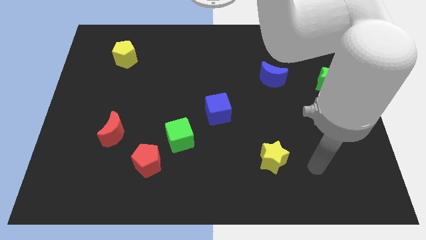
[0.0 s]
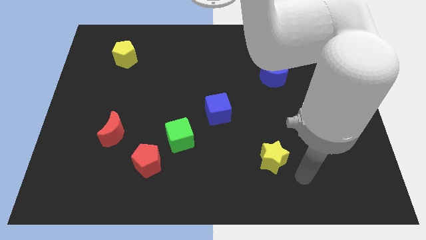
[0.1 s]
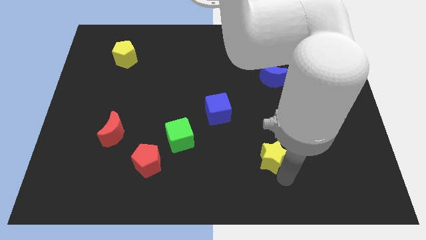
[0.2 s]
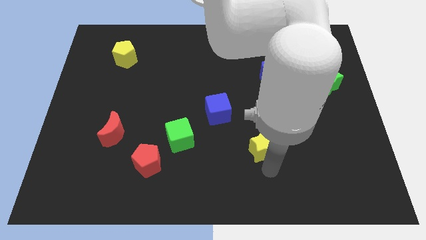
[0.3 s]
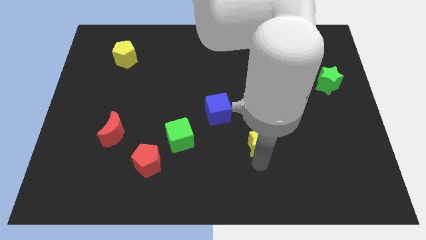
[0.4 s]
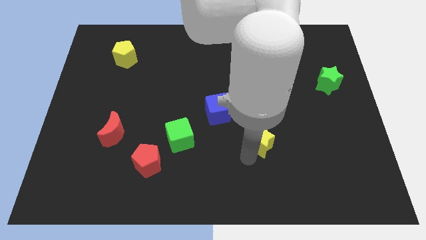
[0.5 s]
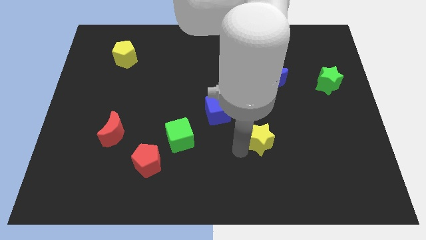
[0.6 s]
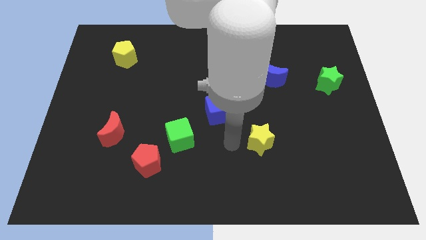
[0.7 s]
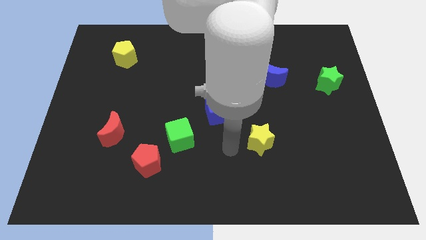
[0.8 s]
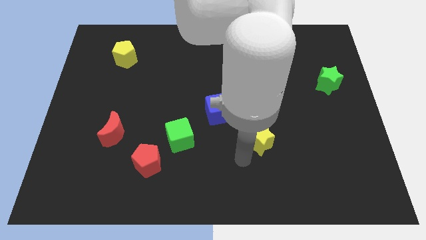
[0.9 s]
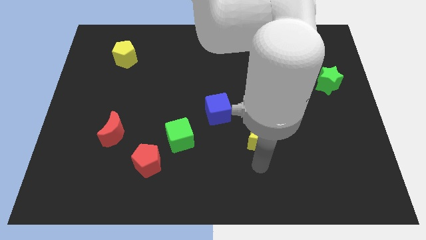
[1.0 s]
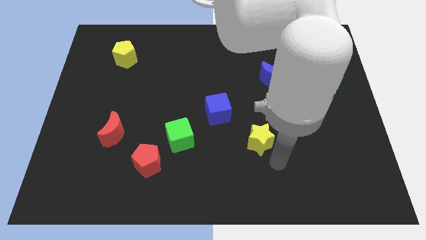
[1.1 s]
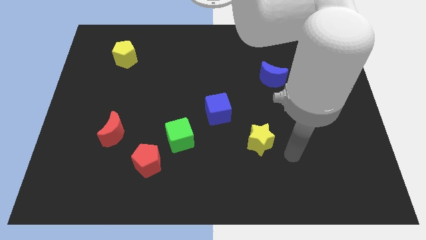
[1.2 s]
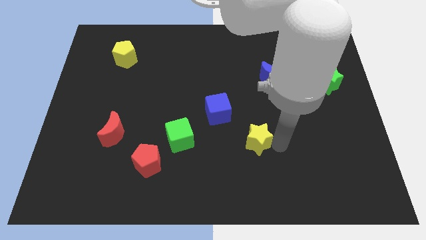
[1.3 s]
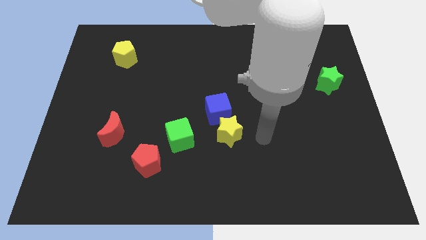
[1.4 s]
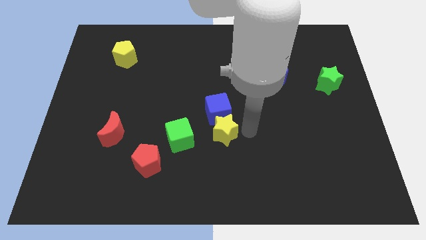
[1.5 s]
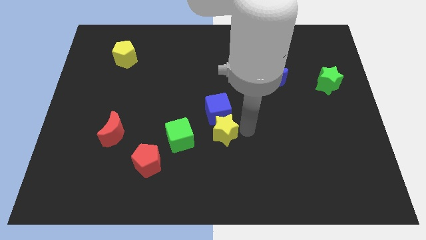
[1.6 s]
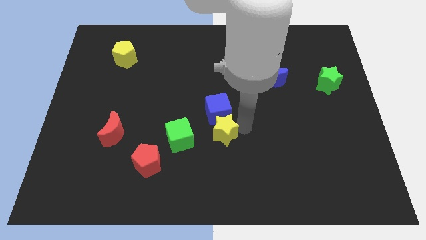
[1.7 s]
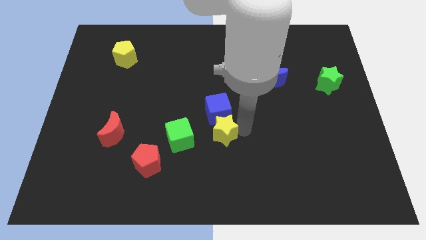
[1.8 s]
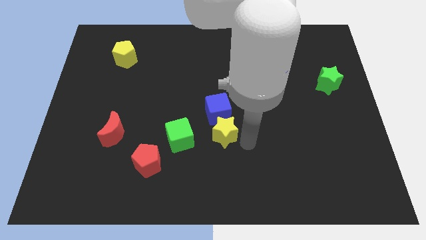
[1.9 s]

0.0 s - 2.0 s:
push the yellow star to the bottom of the blue cube

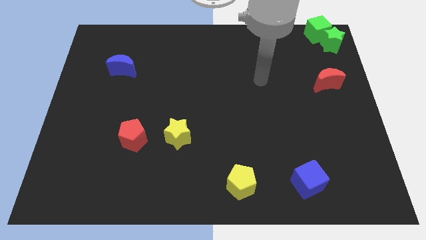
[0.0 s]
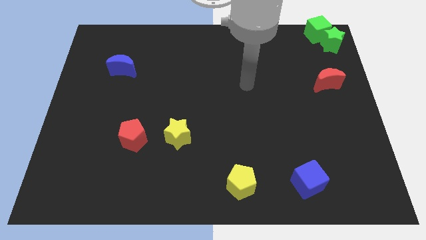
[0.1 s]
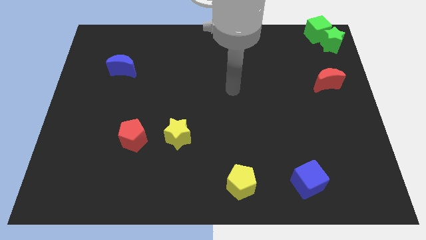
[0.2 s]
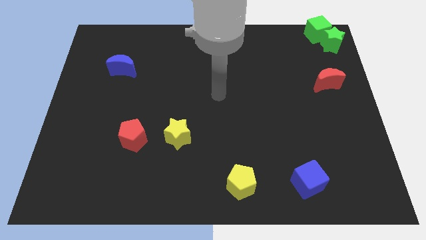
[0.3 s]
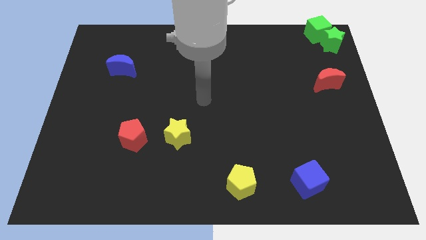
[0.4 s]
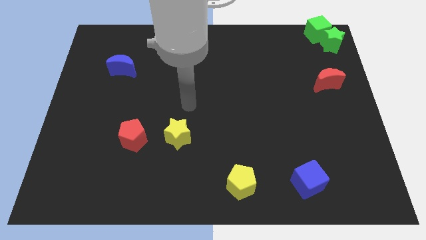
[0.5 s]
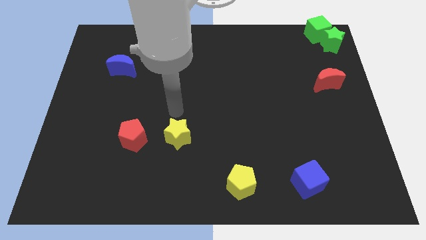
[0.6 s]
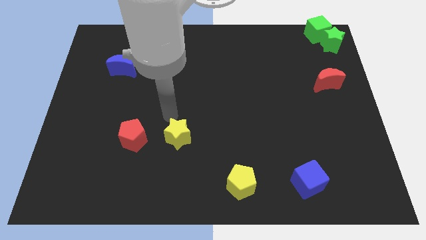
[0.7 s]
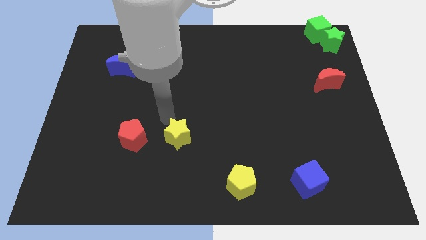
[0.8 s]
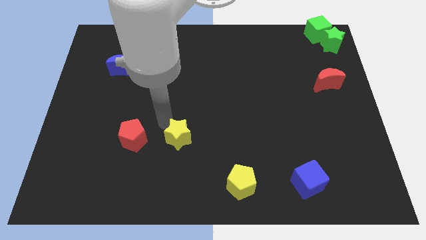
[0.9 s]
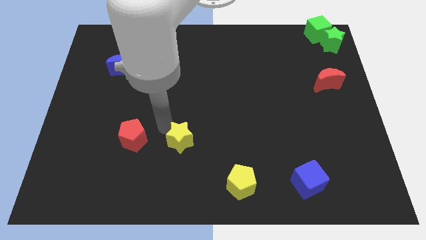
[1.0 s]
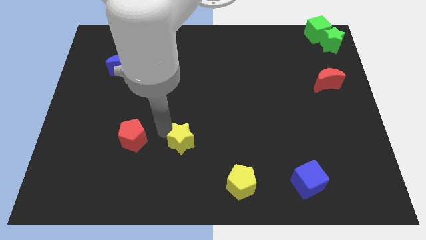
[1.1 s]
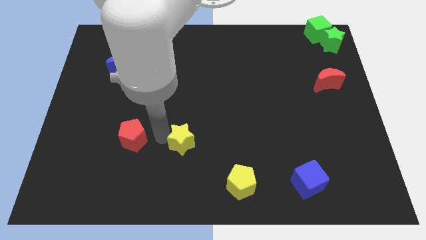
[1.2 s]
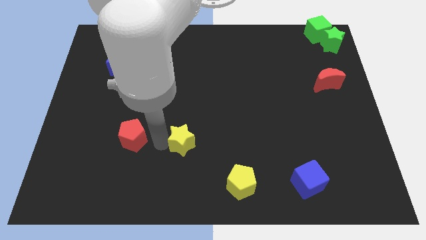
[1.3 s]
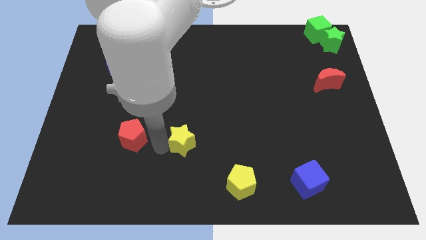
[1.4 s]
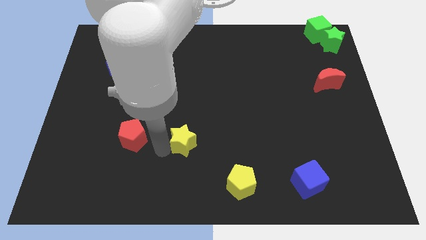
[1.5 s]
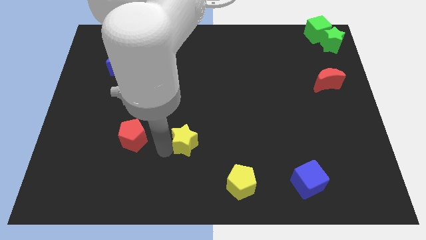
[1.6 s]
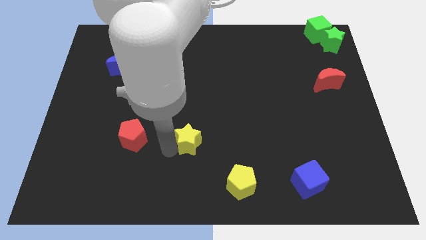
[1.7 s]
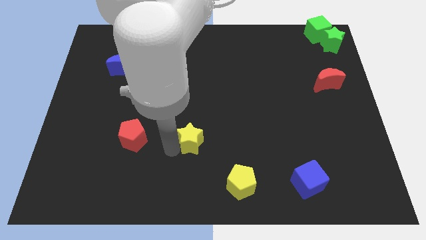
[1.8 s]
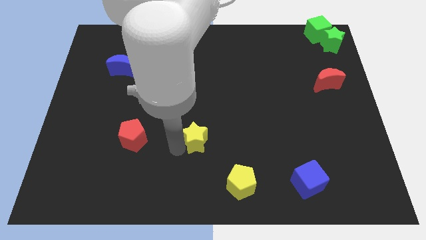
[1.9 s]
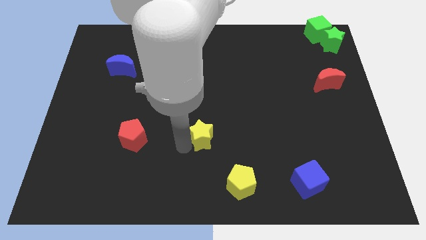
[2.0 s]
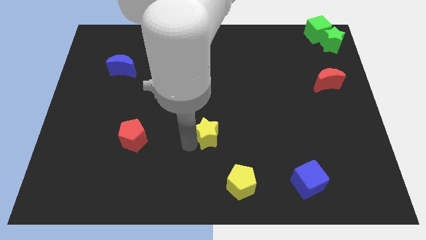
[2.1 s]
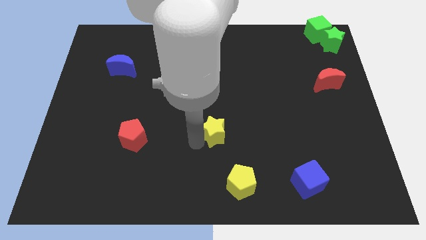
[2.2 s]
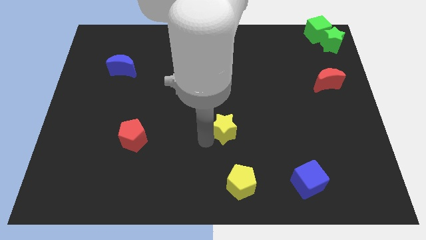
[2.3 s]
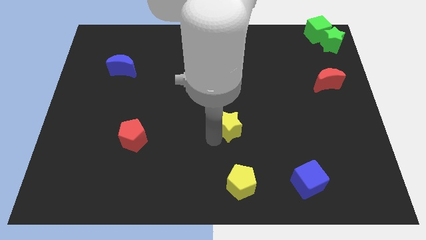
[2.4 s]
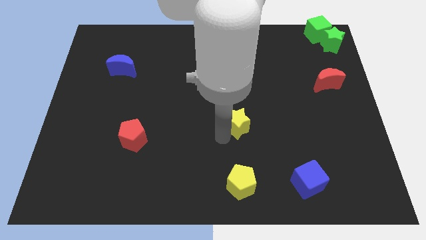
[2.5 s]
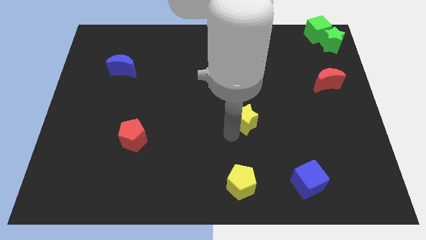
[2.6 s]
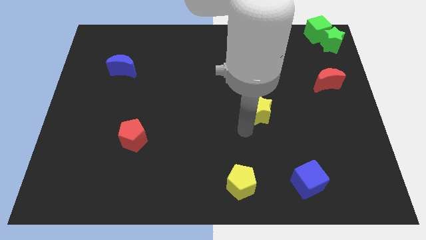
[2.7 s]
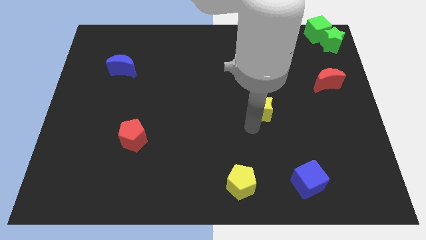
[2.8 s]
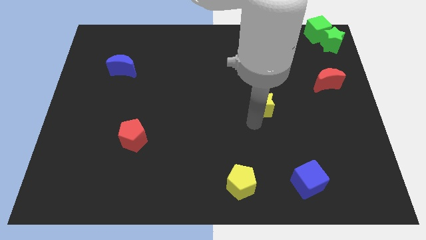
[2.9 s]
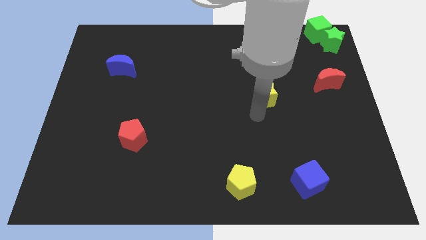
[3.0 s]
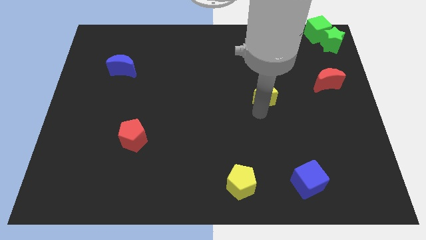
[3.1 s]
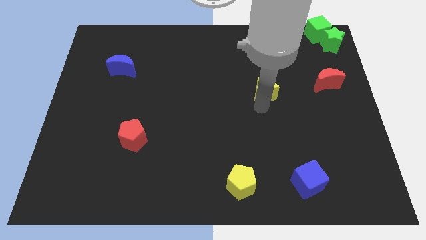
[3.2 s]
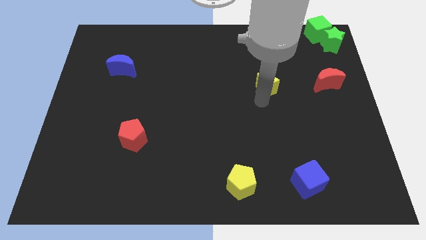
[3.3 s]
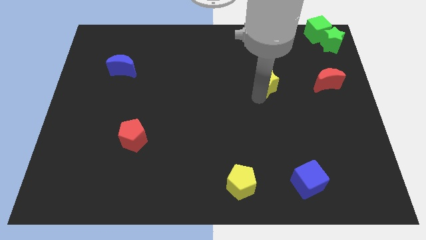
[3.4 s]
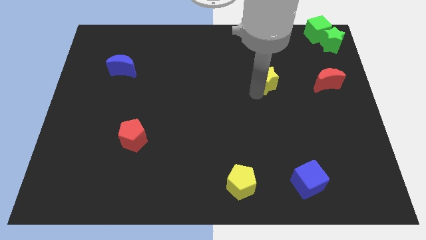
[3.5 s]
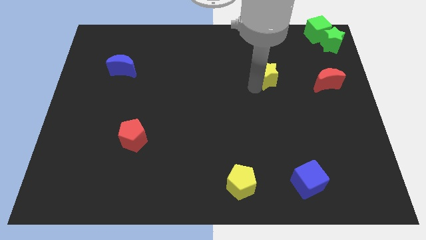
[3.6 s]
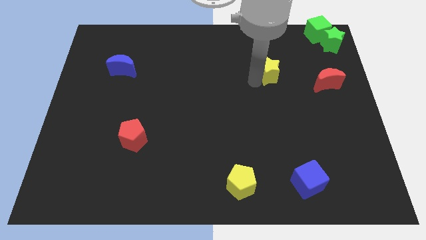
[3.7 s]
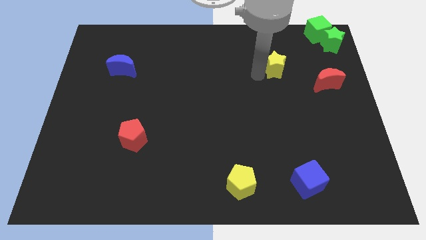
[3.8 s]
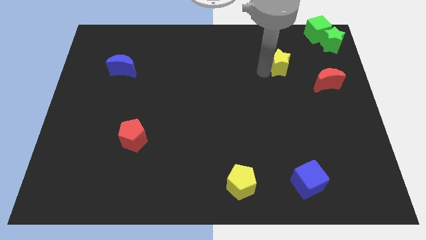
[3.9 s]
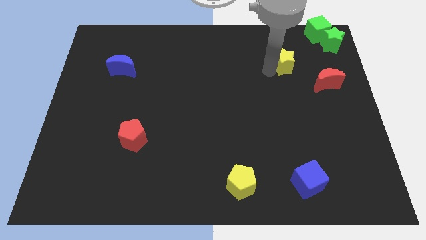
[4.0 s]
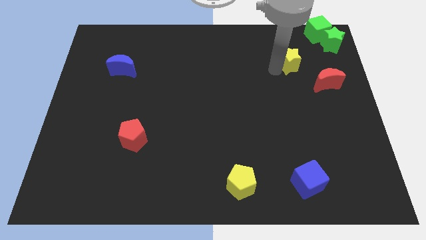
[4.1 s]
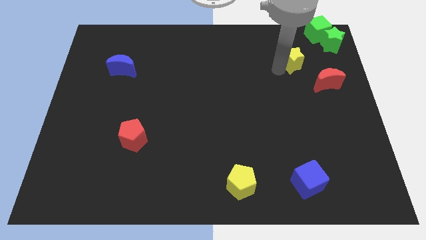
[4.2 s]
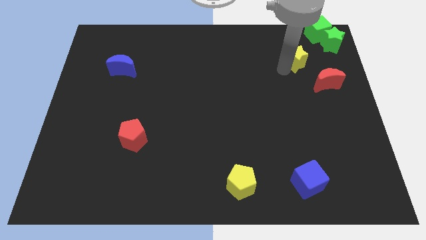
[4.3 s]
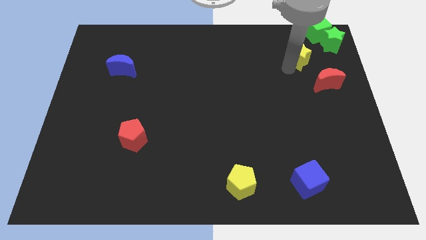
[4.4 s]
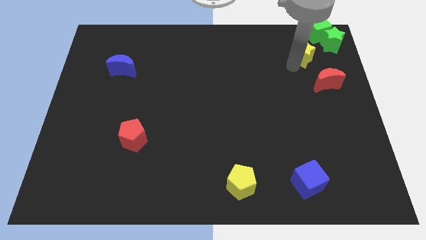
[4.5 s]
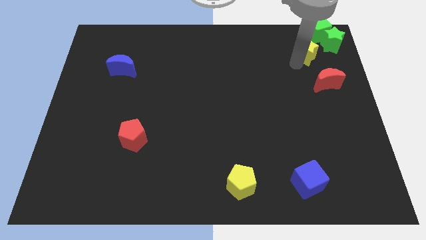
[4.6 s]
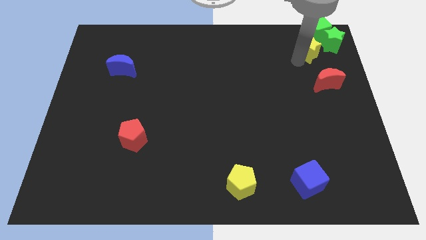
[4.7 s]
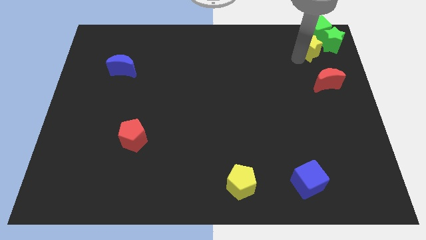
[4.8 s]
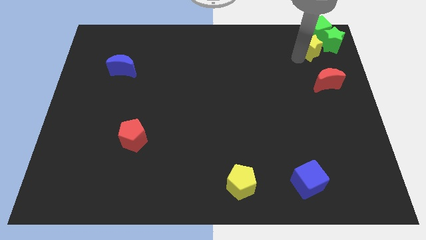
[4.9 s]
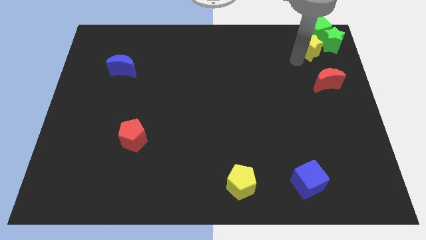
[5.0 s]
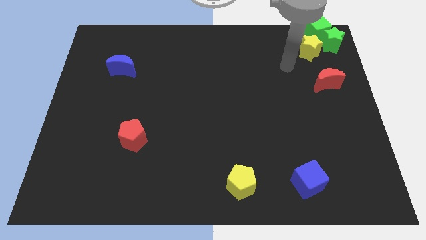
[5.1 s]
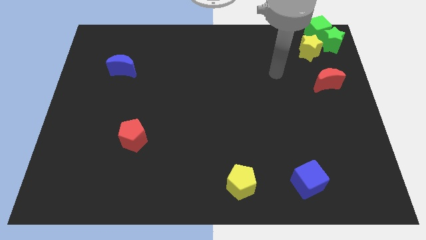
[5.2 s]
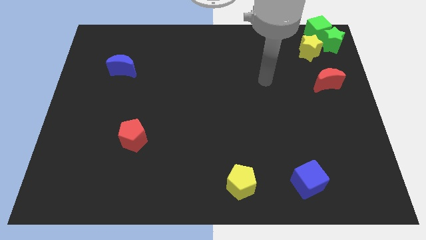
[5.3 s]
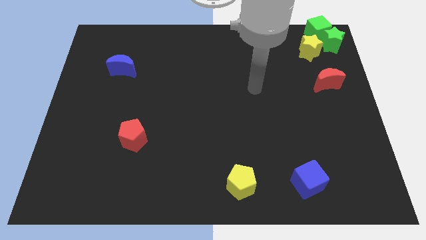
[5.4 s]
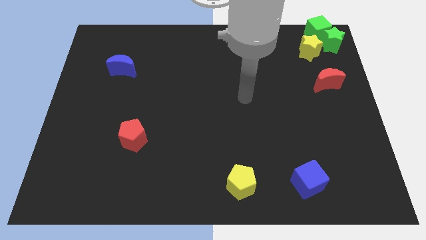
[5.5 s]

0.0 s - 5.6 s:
place the yellow star beside the green star on the right top of board

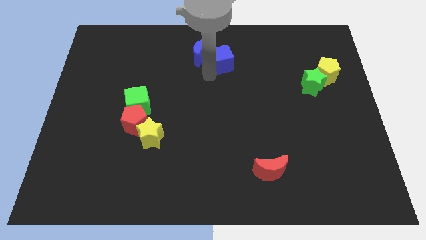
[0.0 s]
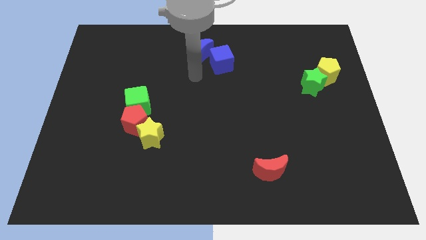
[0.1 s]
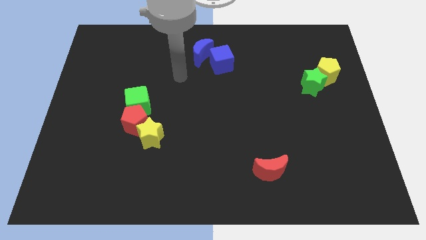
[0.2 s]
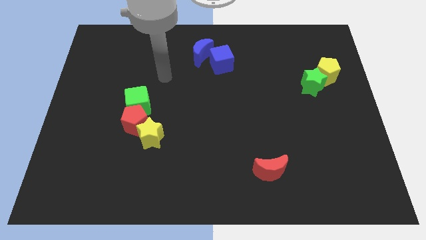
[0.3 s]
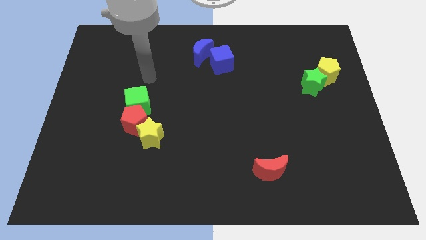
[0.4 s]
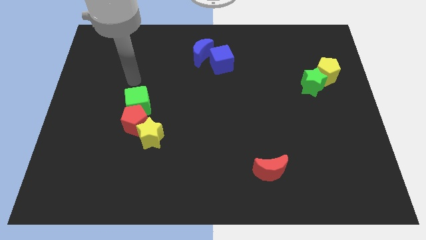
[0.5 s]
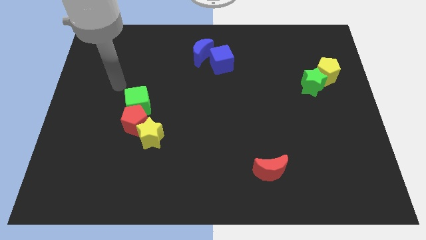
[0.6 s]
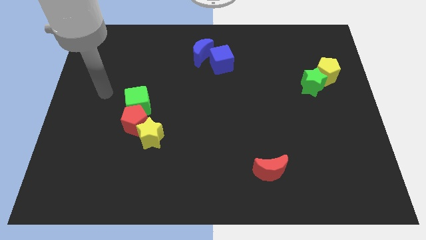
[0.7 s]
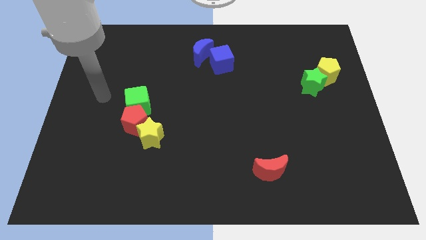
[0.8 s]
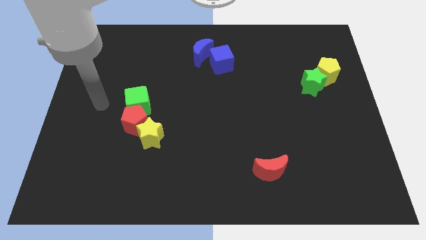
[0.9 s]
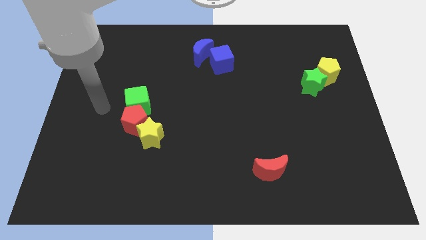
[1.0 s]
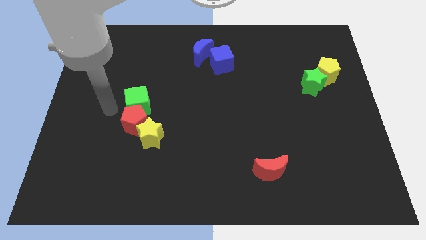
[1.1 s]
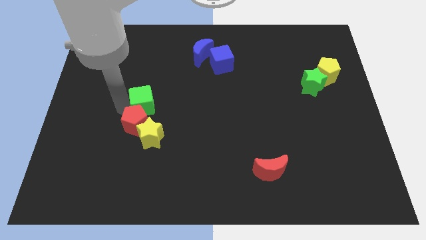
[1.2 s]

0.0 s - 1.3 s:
place your arm on the left side of green cube

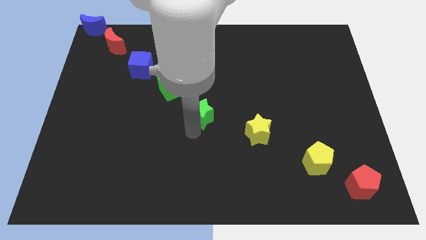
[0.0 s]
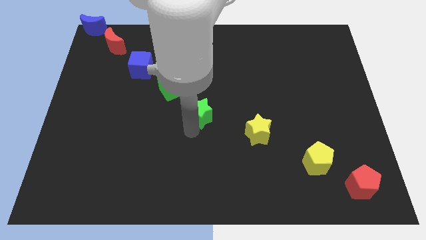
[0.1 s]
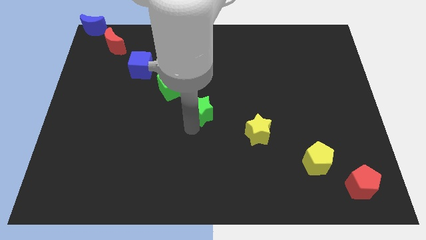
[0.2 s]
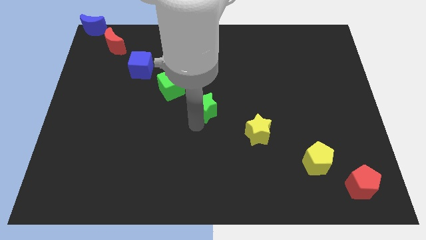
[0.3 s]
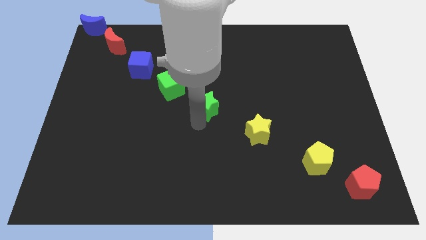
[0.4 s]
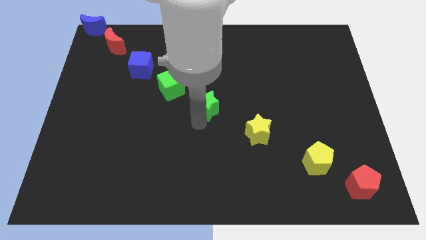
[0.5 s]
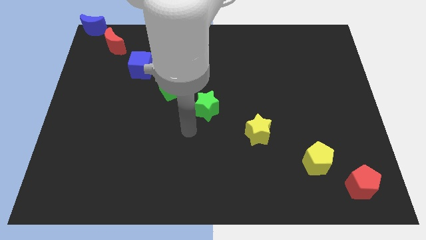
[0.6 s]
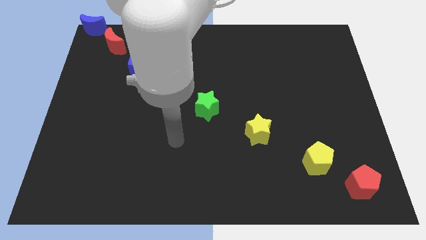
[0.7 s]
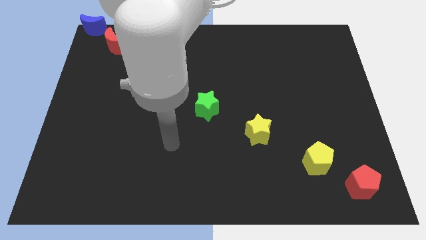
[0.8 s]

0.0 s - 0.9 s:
place the green star in between the yellow star and the green cube
